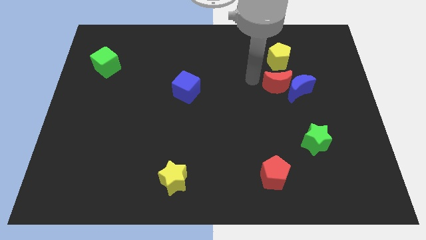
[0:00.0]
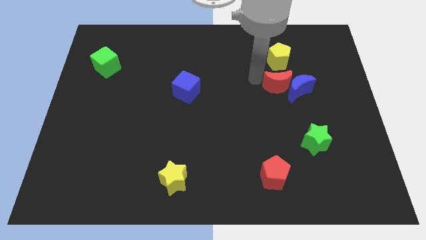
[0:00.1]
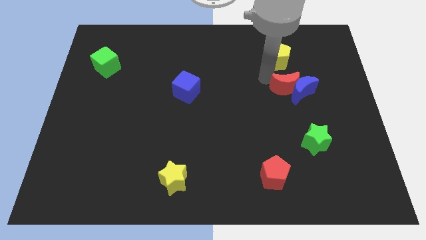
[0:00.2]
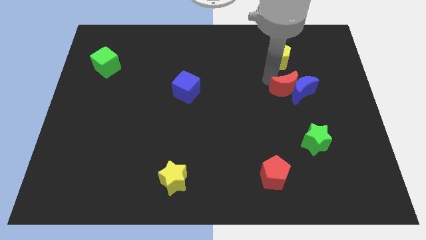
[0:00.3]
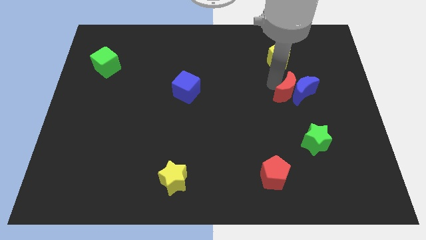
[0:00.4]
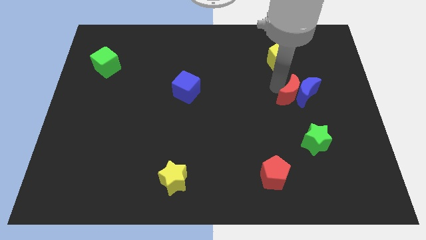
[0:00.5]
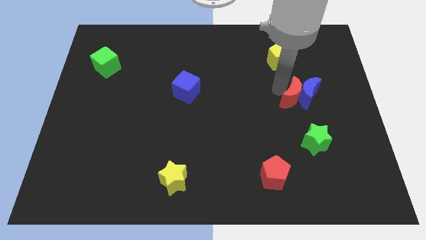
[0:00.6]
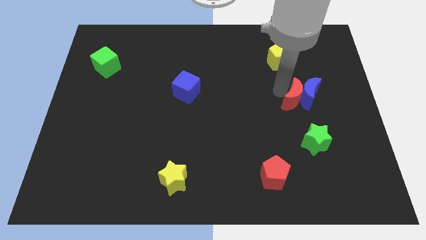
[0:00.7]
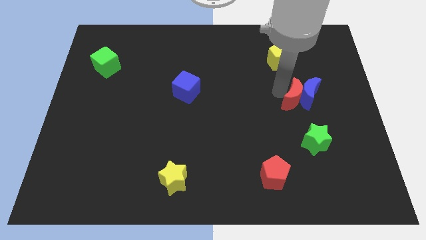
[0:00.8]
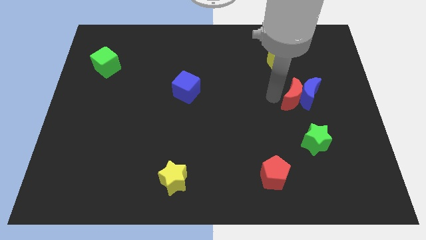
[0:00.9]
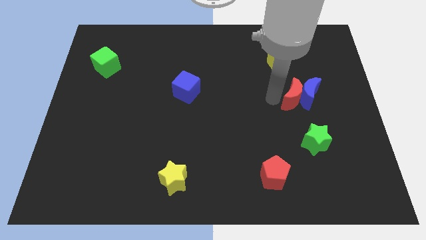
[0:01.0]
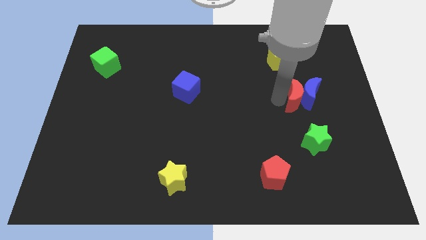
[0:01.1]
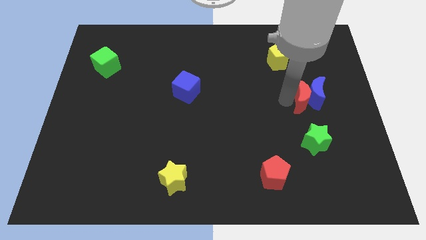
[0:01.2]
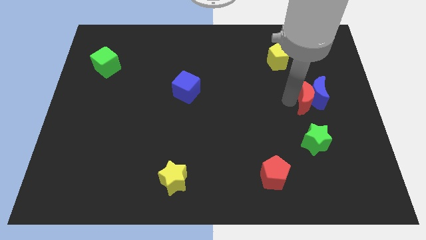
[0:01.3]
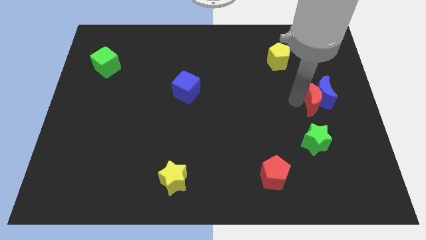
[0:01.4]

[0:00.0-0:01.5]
push the red moon into blue moon

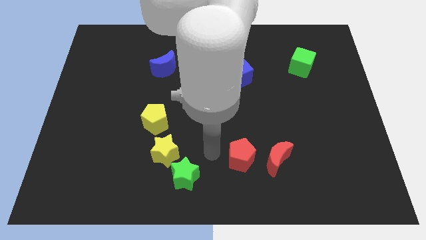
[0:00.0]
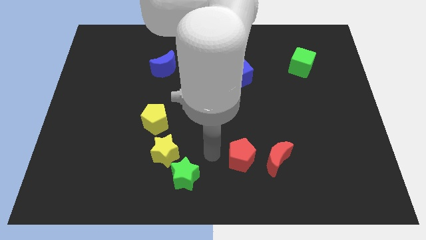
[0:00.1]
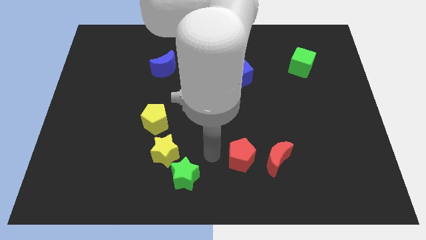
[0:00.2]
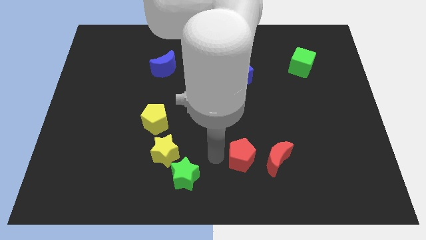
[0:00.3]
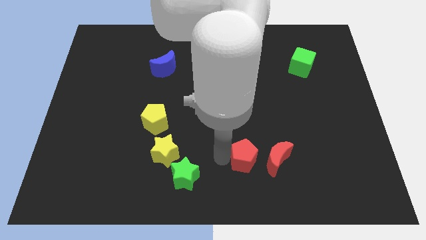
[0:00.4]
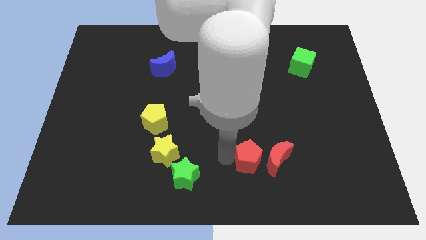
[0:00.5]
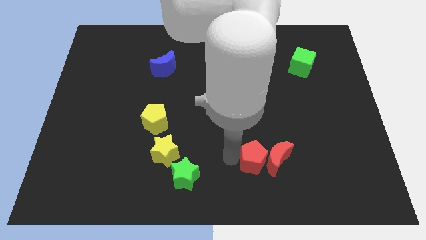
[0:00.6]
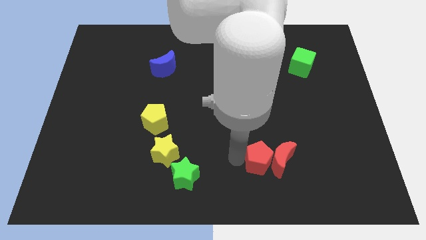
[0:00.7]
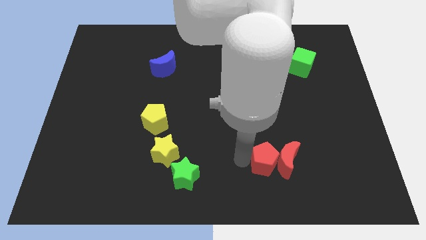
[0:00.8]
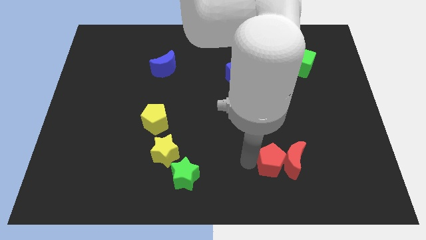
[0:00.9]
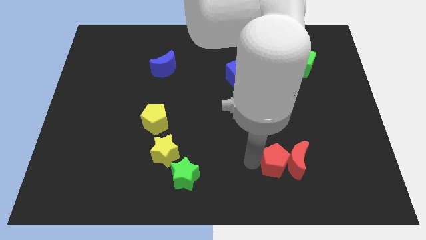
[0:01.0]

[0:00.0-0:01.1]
move the red pentagon into the red crescent

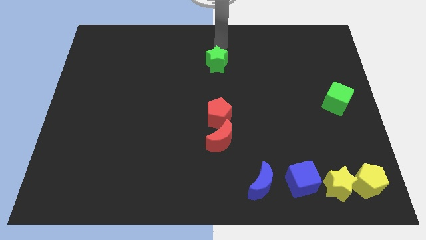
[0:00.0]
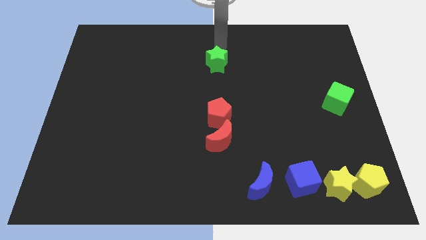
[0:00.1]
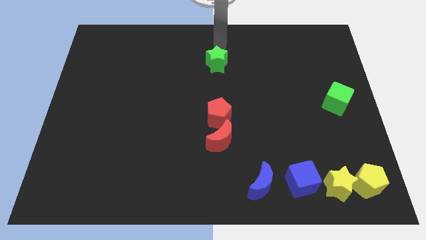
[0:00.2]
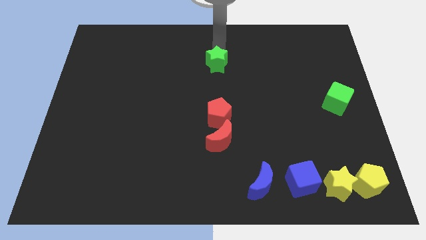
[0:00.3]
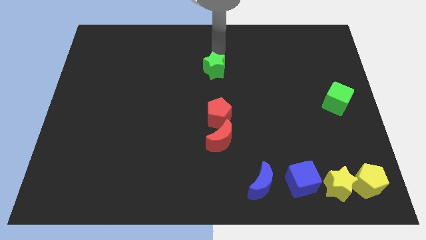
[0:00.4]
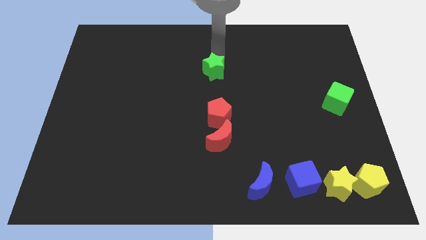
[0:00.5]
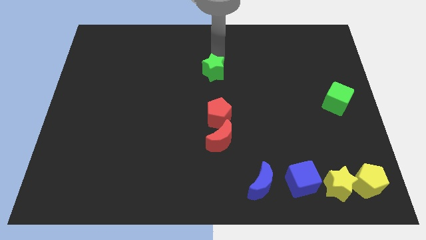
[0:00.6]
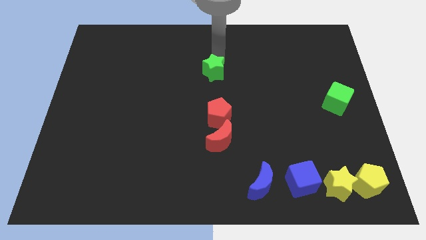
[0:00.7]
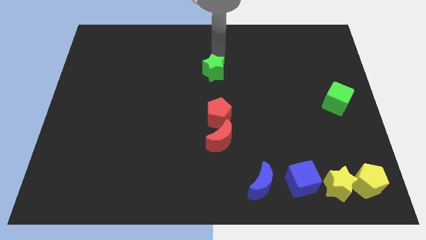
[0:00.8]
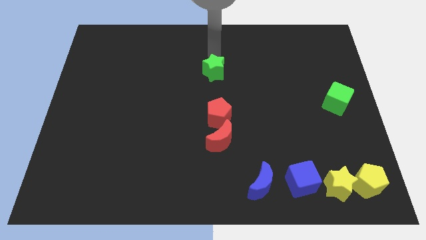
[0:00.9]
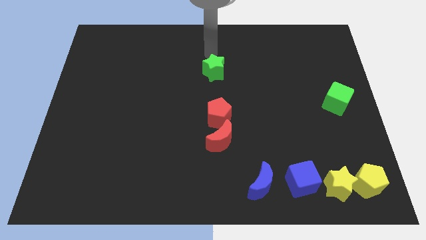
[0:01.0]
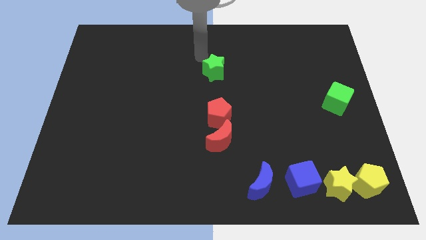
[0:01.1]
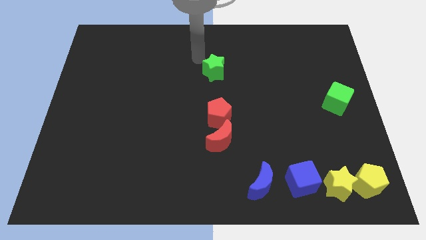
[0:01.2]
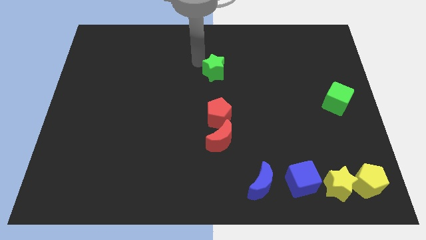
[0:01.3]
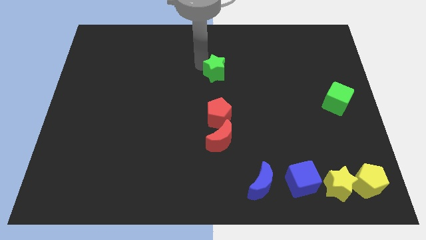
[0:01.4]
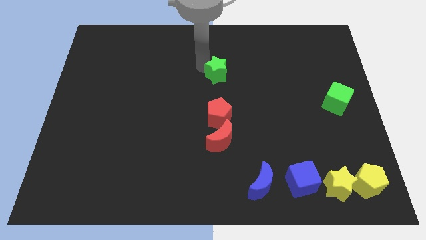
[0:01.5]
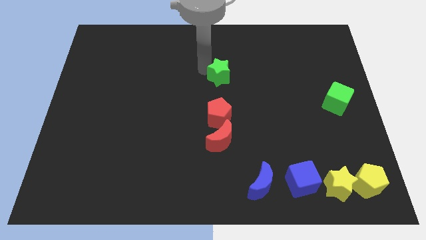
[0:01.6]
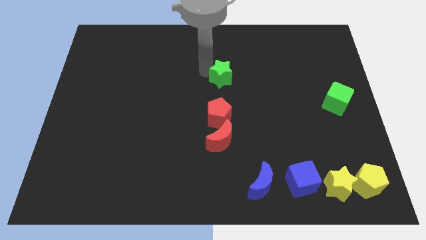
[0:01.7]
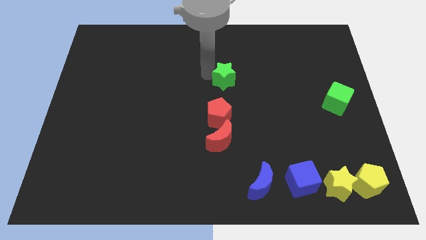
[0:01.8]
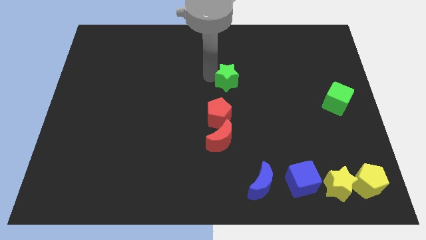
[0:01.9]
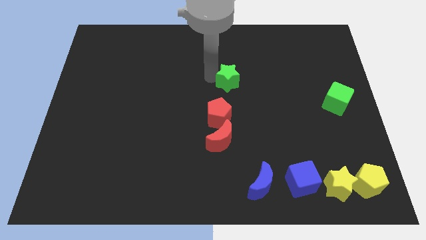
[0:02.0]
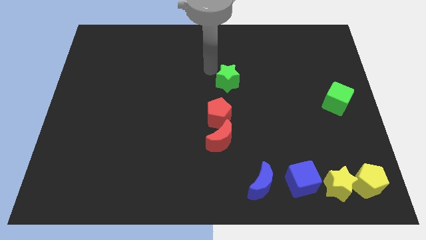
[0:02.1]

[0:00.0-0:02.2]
move the green star to the center

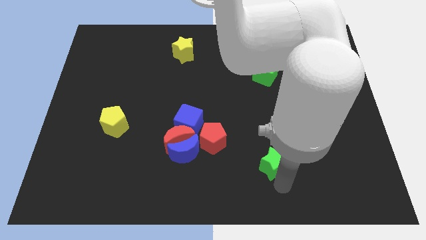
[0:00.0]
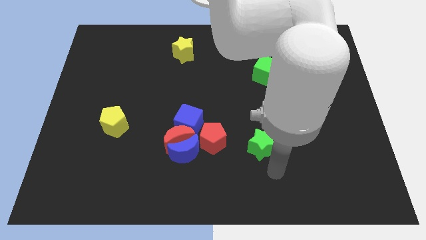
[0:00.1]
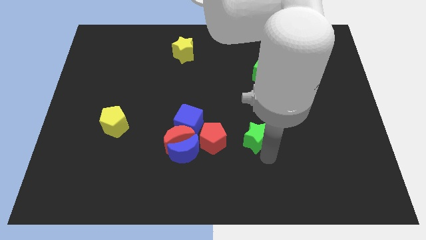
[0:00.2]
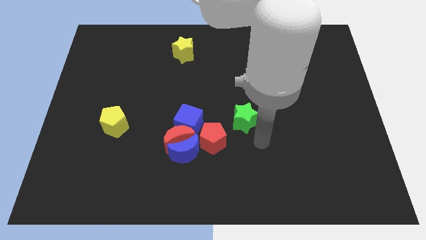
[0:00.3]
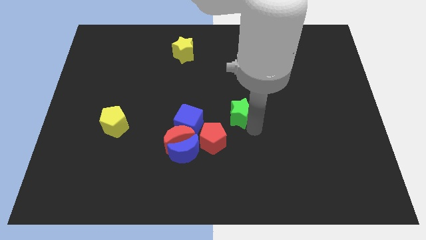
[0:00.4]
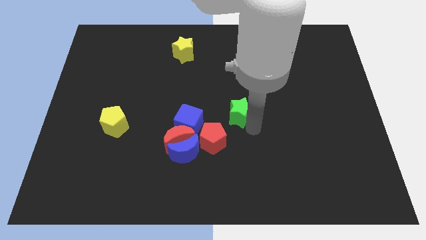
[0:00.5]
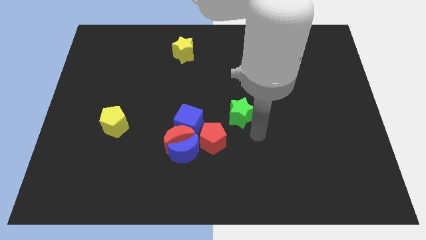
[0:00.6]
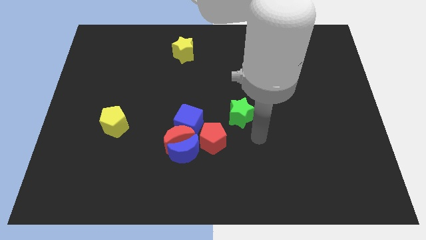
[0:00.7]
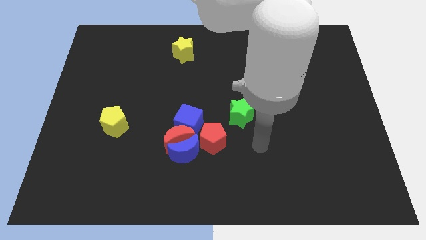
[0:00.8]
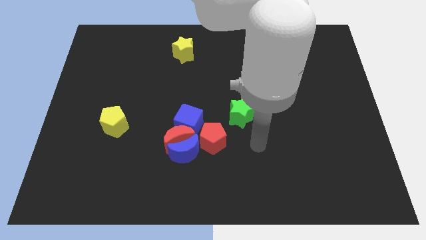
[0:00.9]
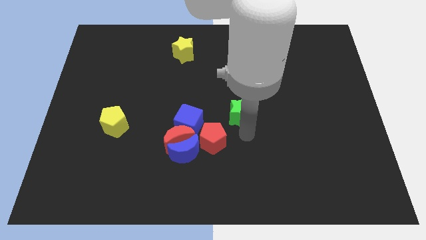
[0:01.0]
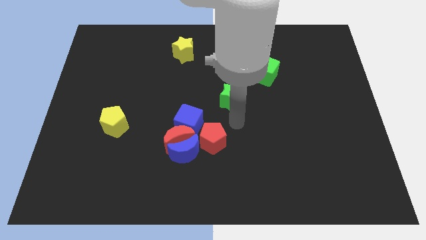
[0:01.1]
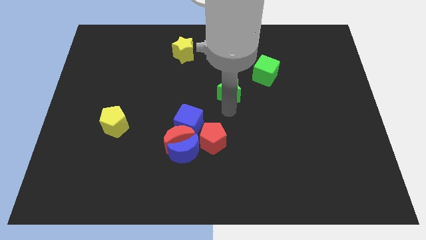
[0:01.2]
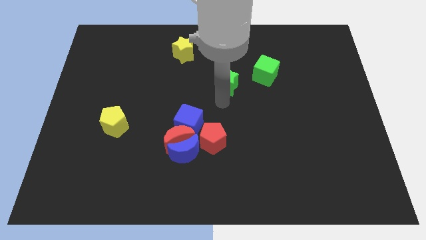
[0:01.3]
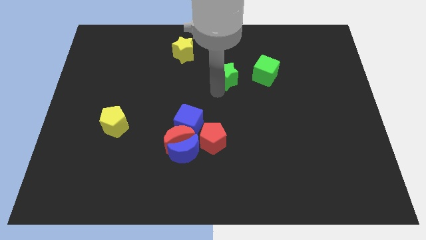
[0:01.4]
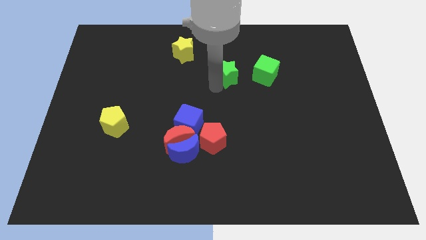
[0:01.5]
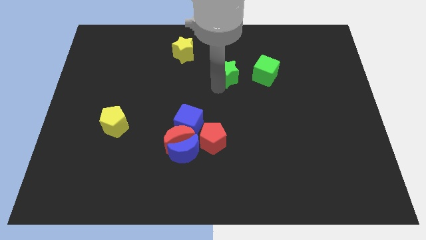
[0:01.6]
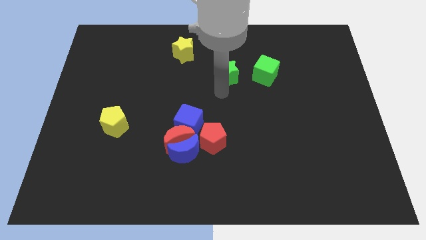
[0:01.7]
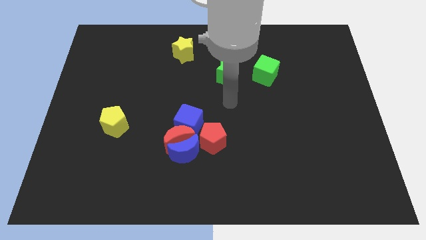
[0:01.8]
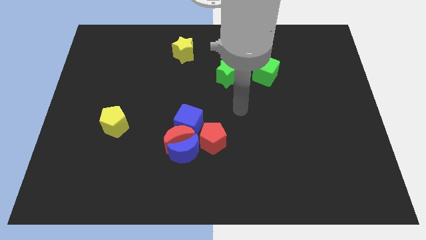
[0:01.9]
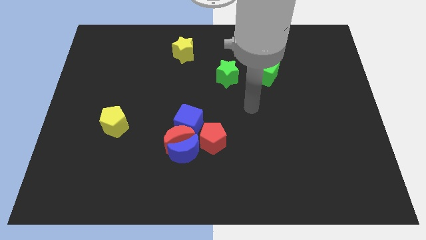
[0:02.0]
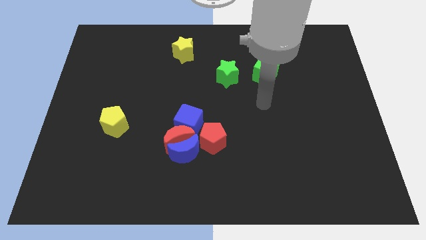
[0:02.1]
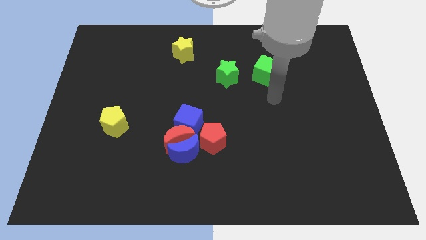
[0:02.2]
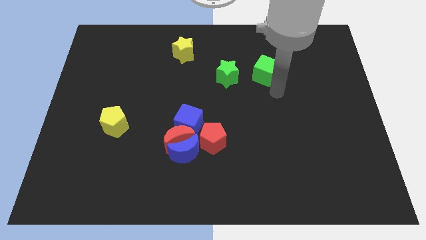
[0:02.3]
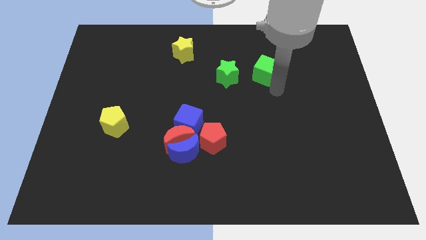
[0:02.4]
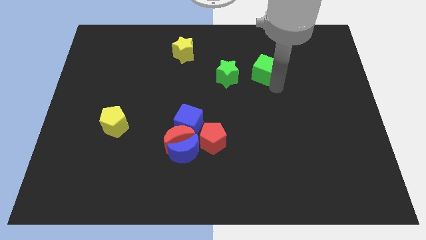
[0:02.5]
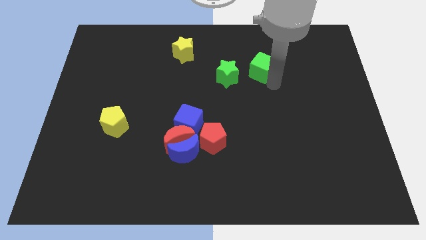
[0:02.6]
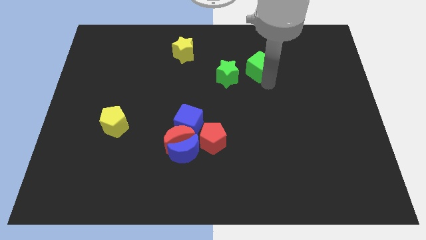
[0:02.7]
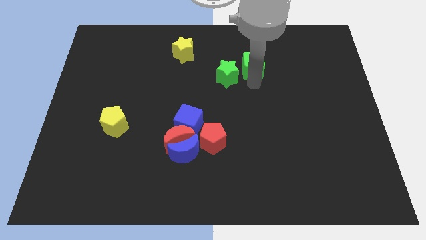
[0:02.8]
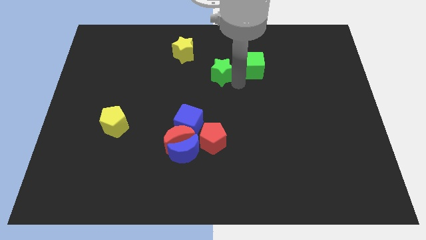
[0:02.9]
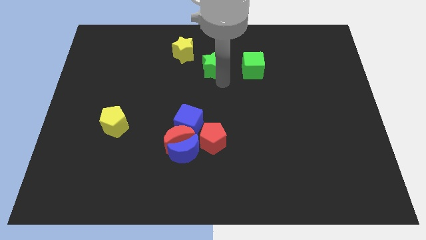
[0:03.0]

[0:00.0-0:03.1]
push the green star upwards left to the green cube

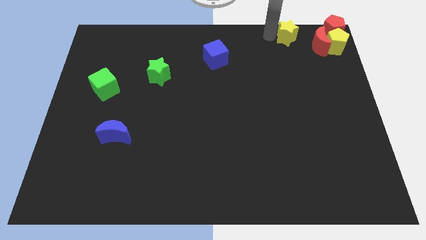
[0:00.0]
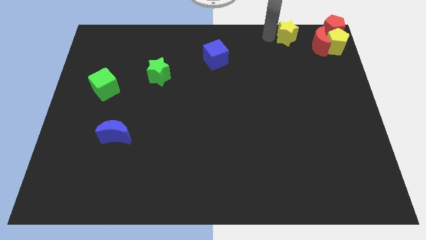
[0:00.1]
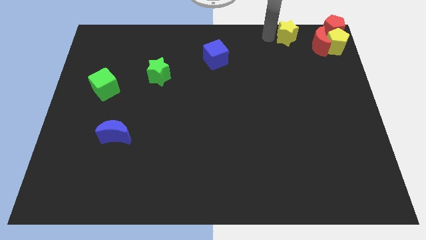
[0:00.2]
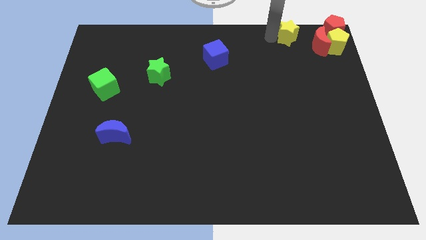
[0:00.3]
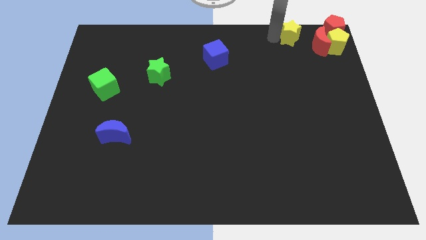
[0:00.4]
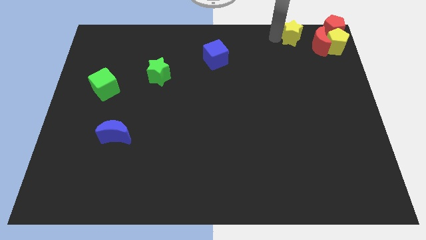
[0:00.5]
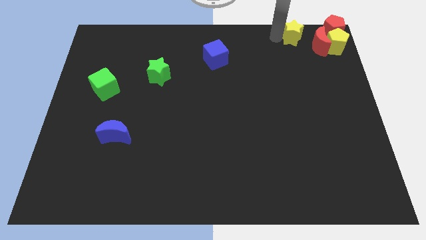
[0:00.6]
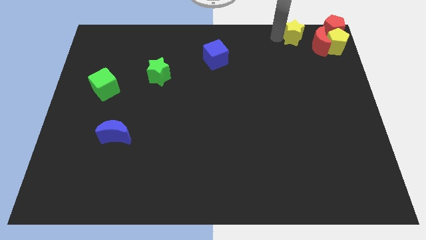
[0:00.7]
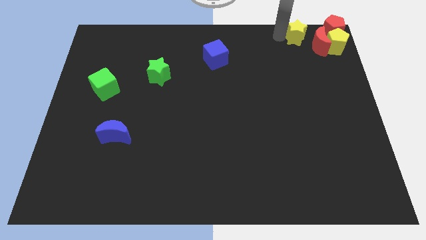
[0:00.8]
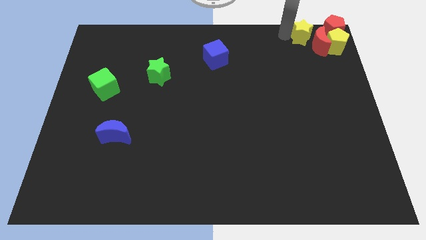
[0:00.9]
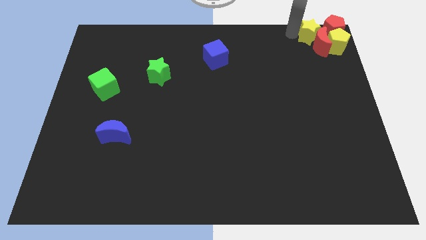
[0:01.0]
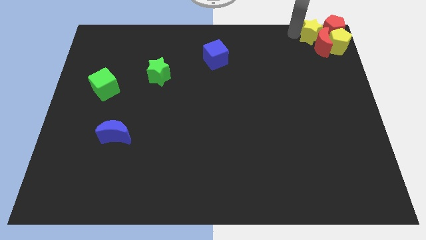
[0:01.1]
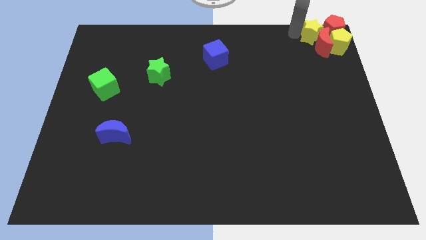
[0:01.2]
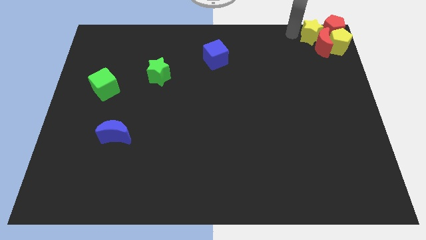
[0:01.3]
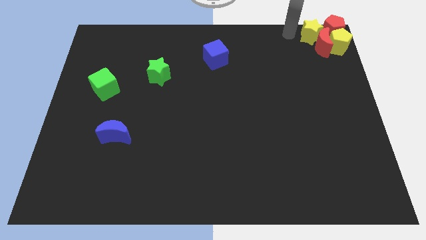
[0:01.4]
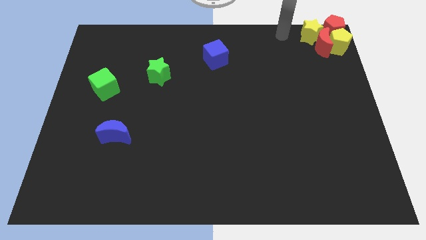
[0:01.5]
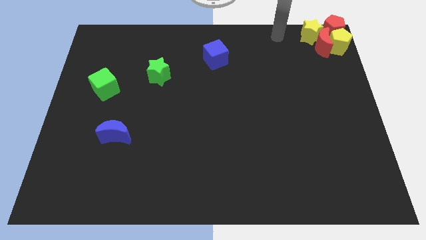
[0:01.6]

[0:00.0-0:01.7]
push the yellow star into the red blocks
